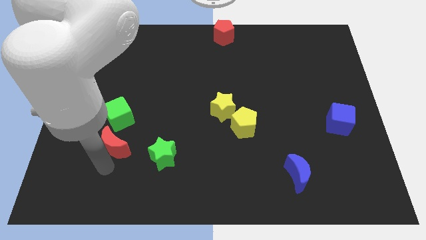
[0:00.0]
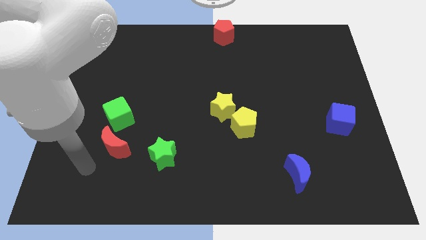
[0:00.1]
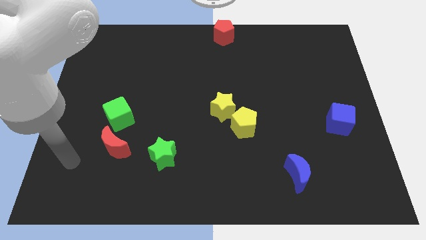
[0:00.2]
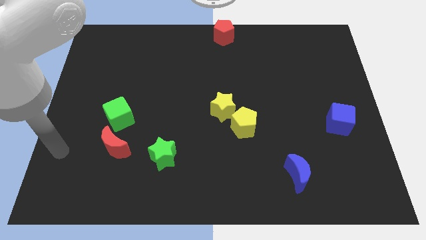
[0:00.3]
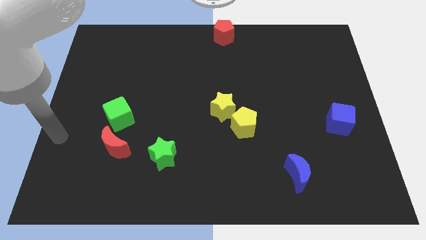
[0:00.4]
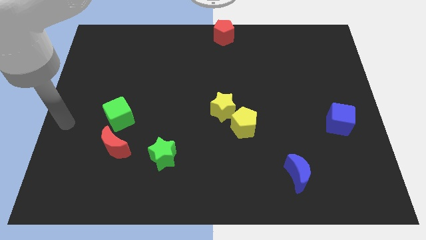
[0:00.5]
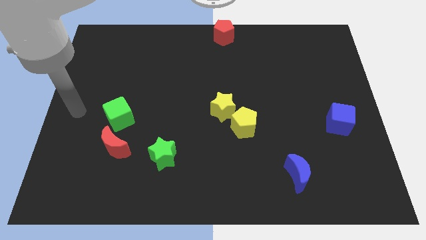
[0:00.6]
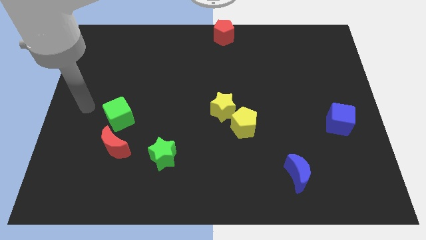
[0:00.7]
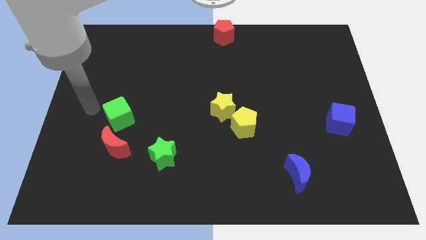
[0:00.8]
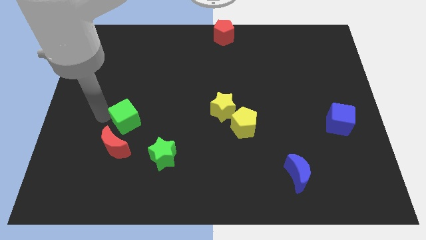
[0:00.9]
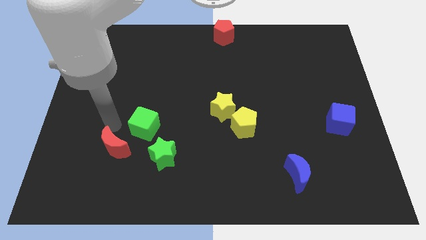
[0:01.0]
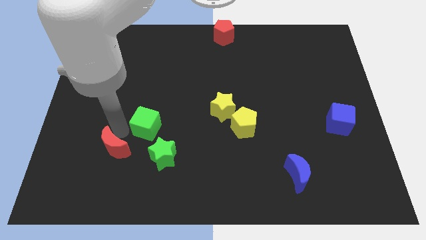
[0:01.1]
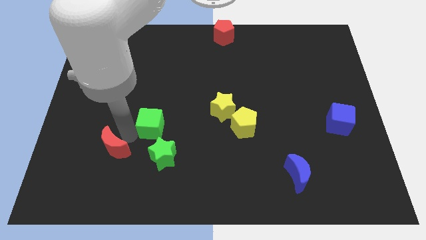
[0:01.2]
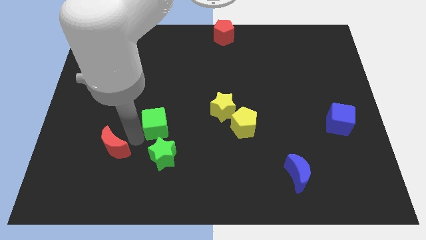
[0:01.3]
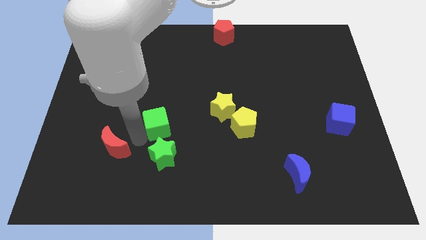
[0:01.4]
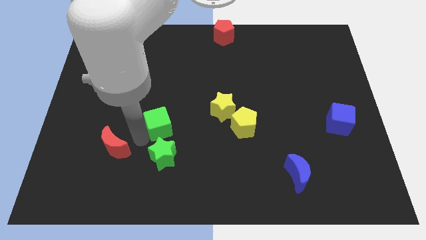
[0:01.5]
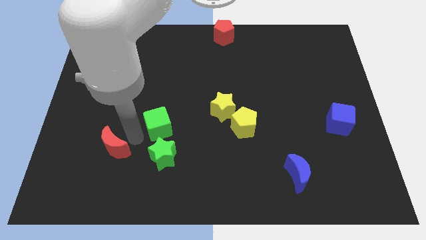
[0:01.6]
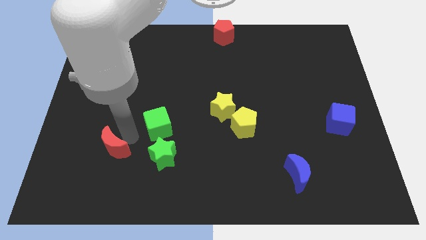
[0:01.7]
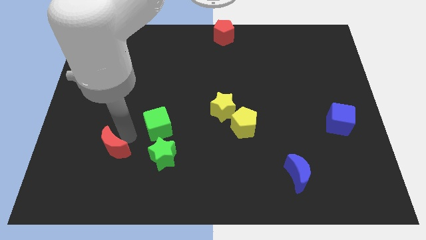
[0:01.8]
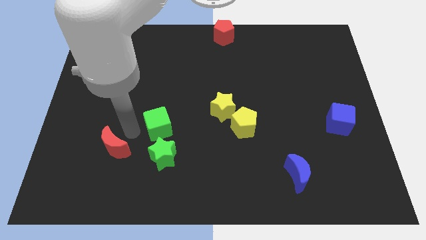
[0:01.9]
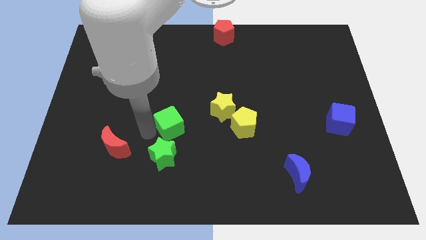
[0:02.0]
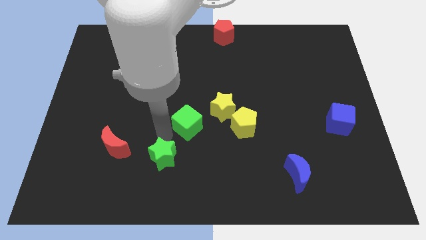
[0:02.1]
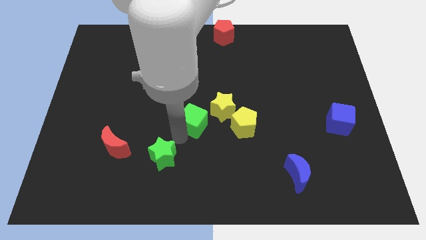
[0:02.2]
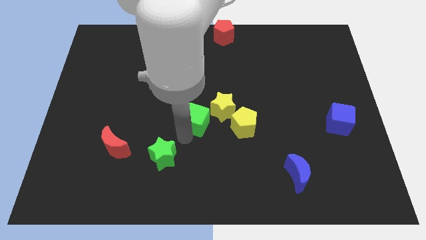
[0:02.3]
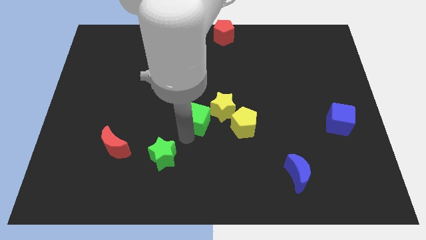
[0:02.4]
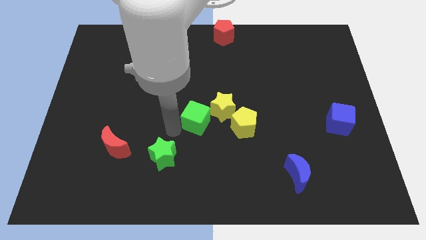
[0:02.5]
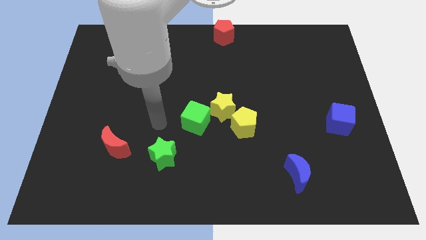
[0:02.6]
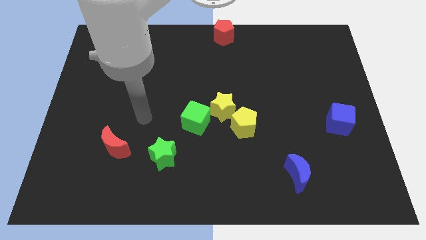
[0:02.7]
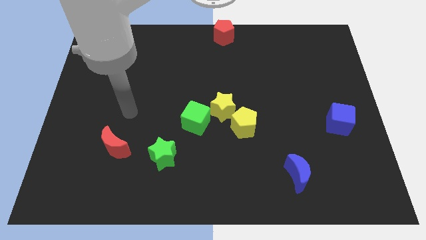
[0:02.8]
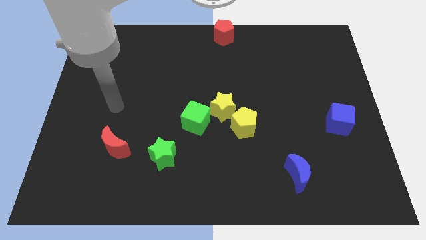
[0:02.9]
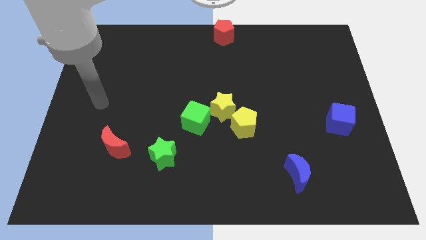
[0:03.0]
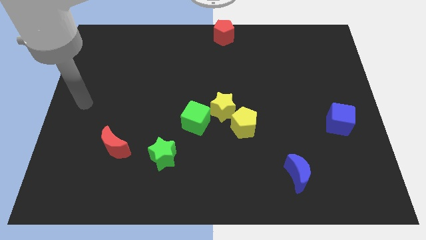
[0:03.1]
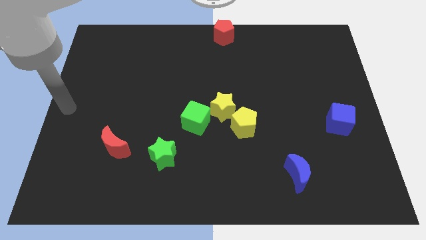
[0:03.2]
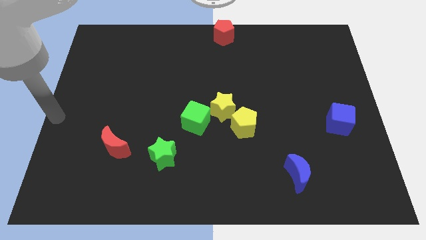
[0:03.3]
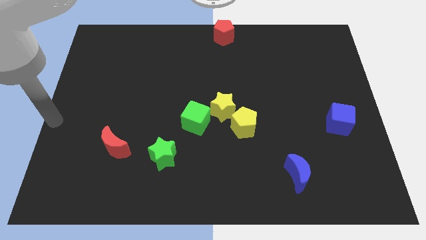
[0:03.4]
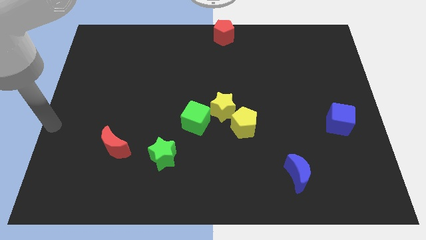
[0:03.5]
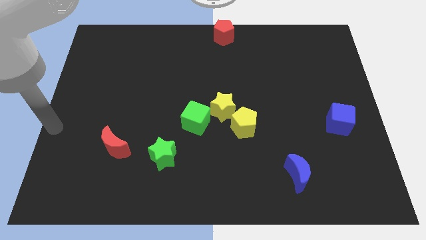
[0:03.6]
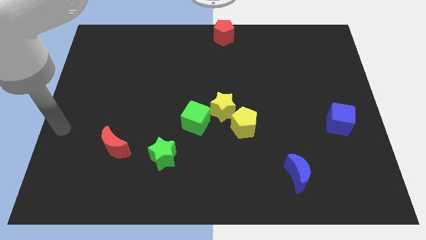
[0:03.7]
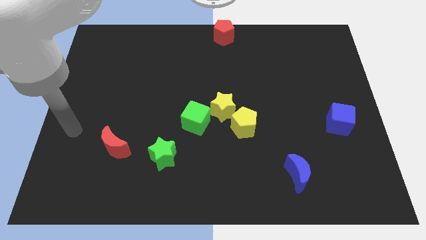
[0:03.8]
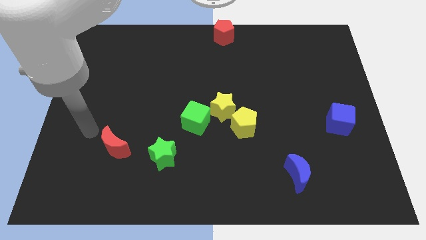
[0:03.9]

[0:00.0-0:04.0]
push the green cube to the left of the yellow star

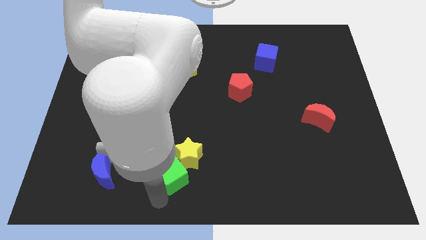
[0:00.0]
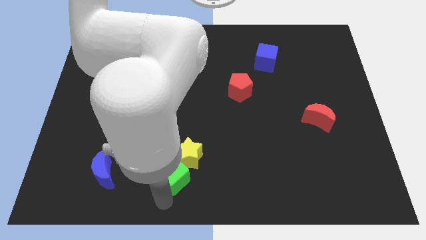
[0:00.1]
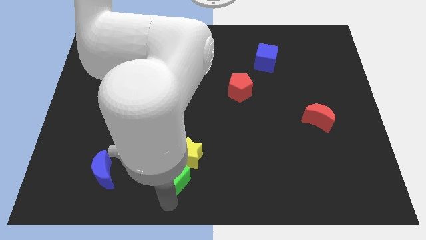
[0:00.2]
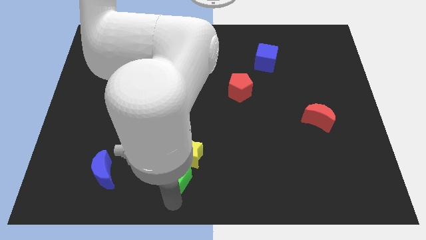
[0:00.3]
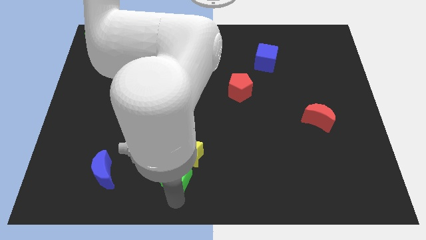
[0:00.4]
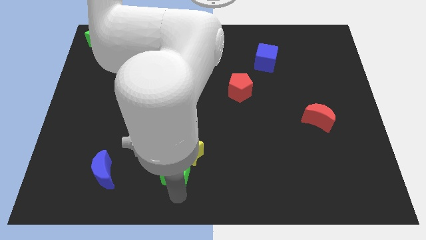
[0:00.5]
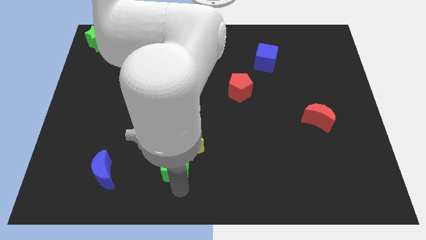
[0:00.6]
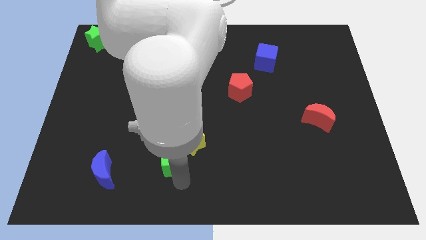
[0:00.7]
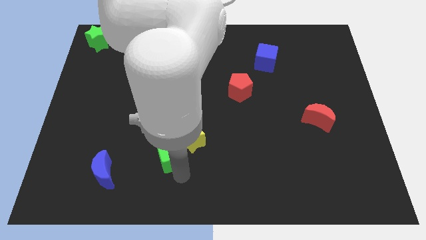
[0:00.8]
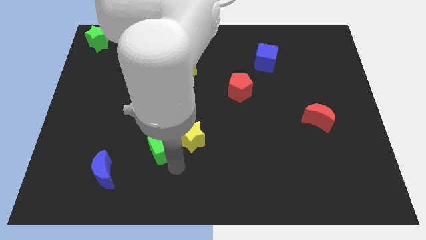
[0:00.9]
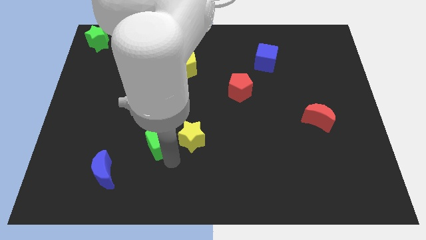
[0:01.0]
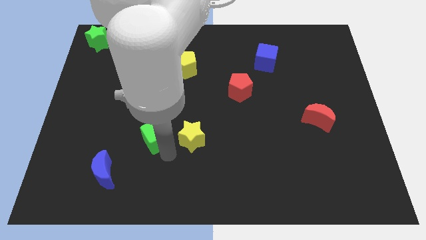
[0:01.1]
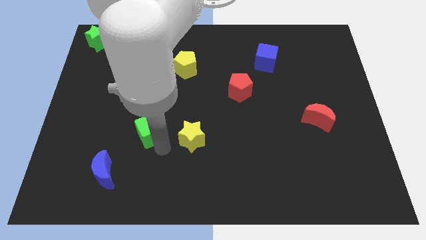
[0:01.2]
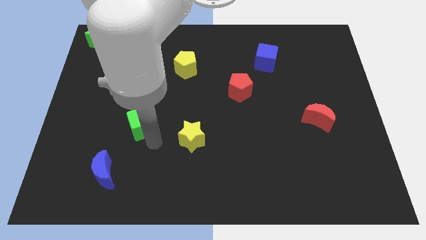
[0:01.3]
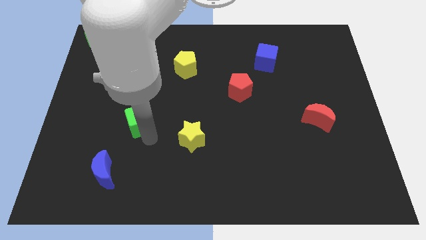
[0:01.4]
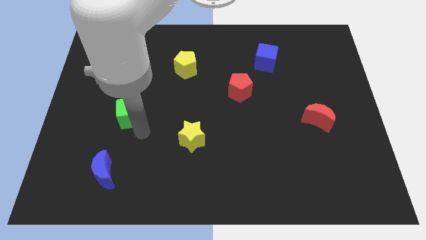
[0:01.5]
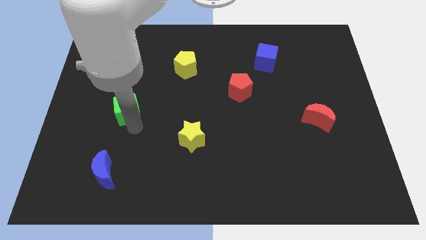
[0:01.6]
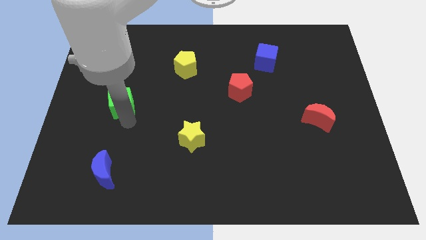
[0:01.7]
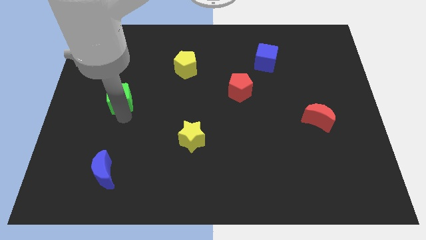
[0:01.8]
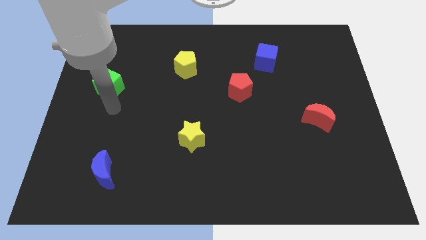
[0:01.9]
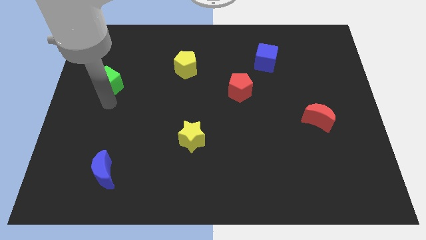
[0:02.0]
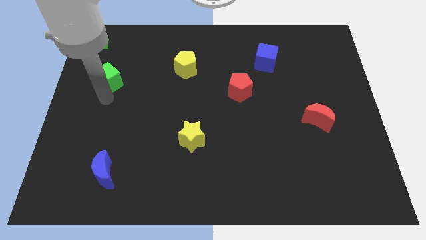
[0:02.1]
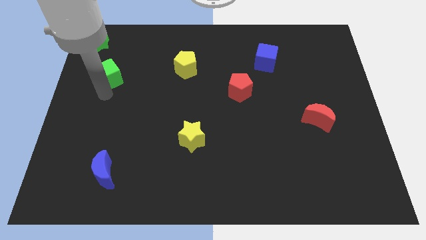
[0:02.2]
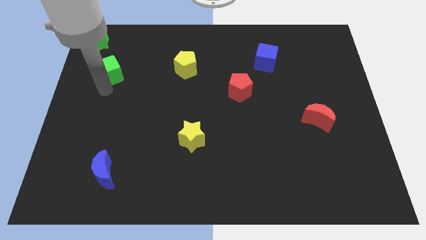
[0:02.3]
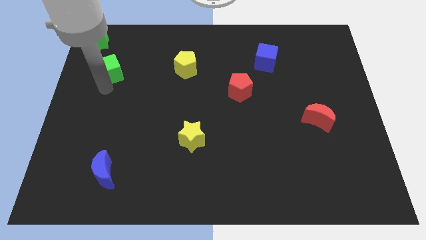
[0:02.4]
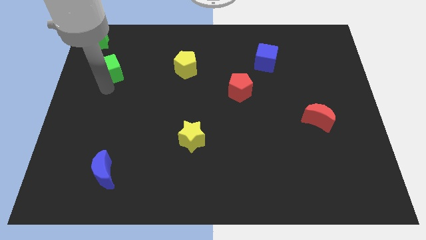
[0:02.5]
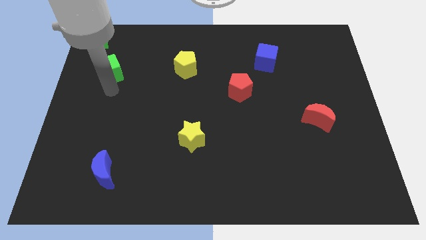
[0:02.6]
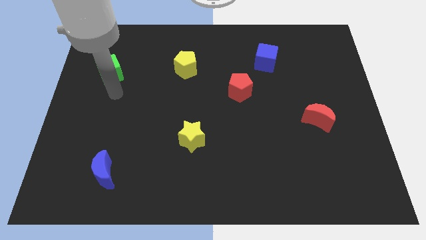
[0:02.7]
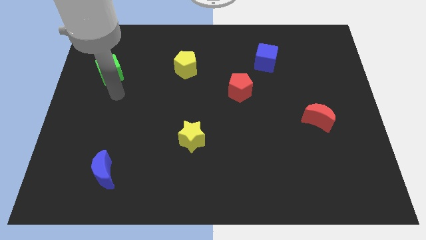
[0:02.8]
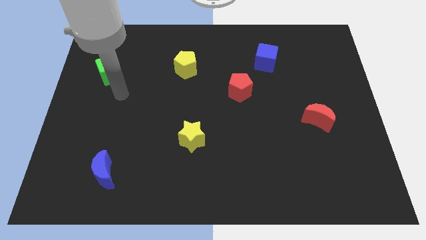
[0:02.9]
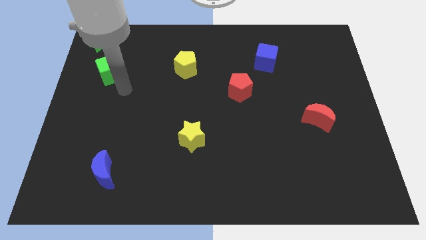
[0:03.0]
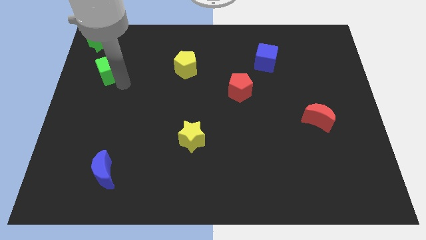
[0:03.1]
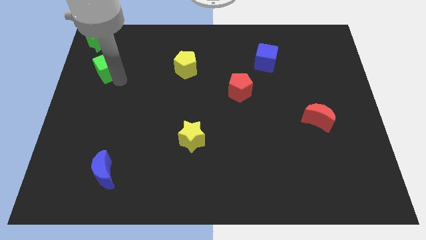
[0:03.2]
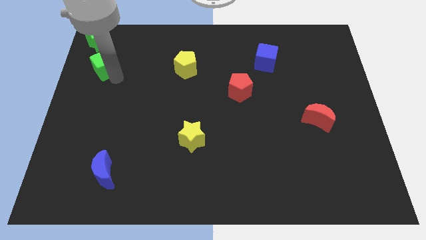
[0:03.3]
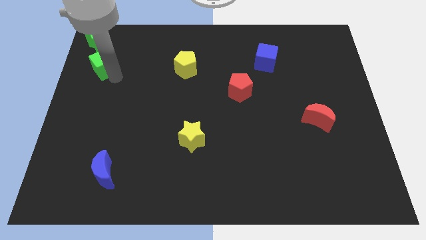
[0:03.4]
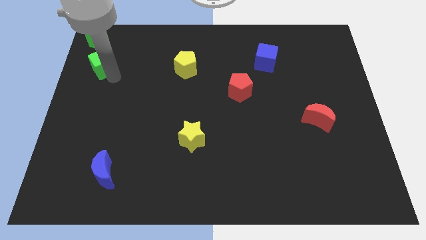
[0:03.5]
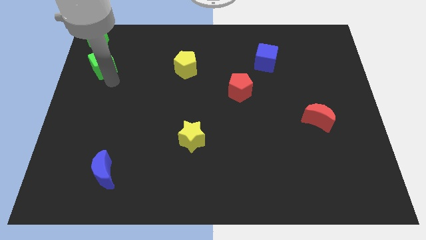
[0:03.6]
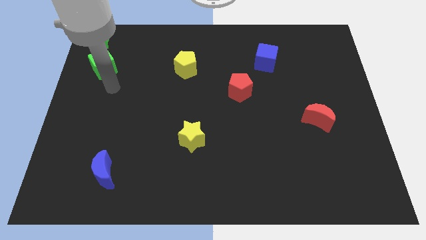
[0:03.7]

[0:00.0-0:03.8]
place the green cube below the green star

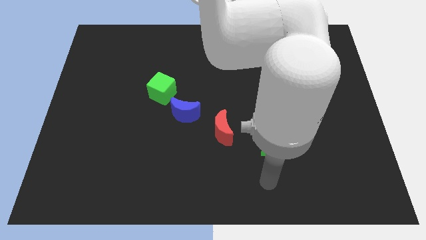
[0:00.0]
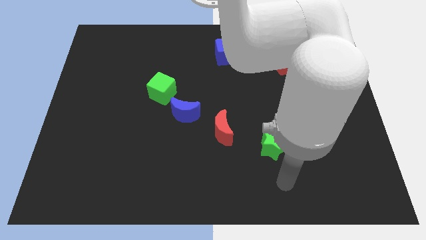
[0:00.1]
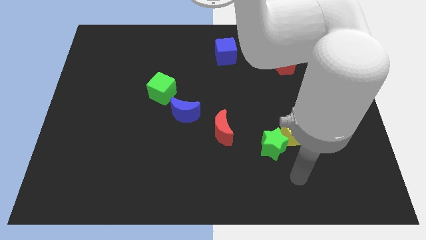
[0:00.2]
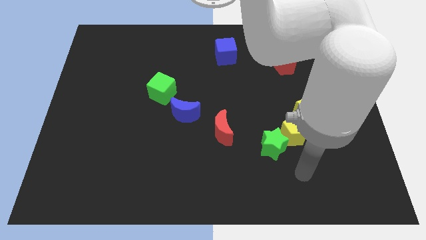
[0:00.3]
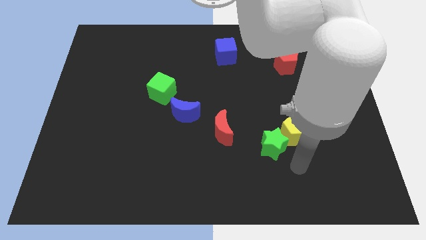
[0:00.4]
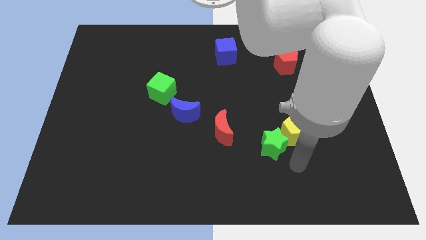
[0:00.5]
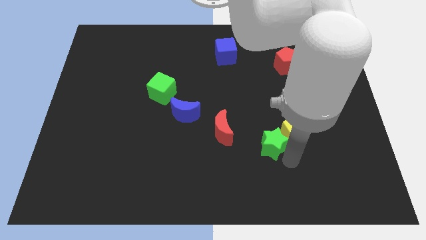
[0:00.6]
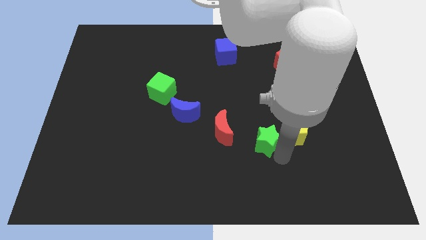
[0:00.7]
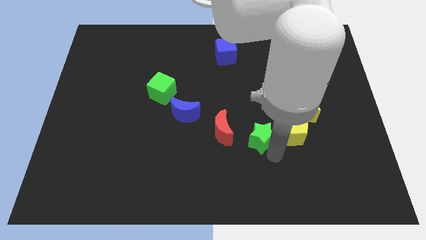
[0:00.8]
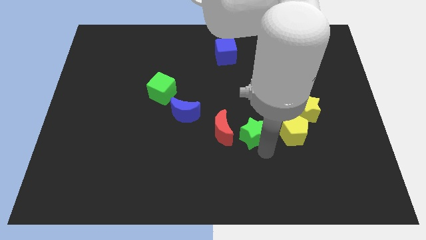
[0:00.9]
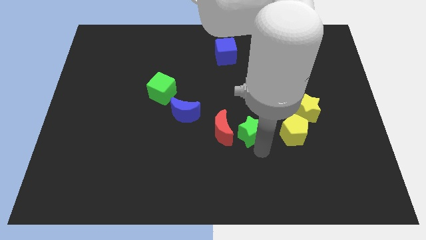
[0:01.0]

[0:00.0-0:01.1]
push green star to the right of red moon
